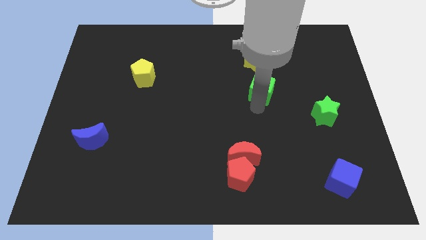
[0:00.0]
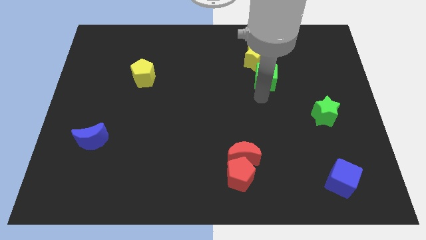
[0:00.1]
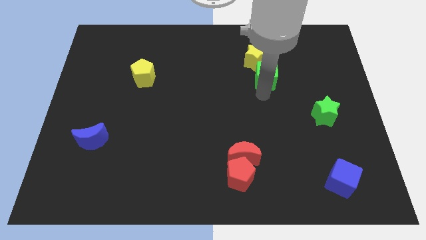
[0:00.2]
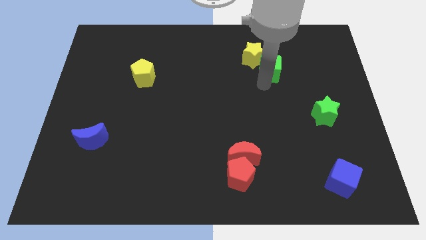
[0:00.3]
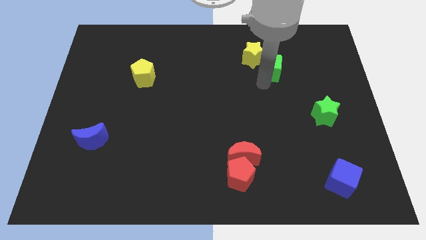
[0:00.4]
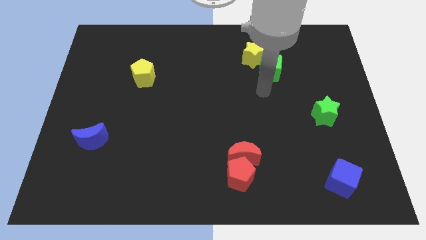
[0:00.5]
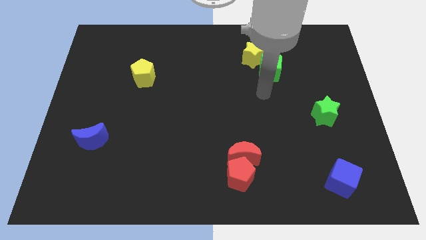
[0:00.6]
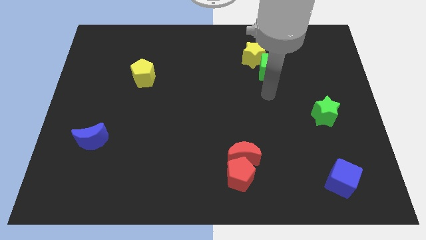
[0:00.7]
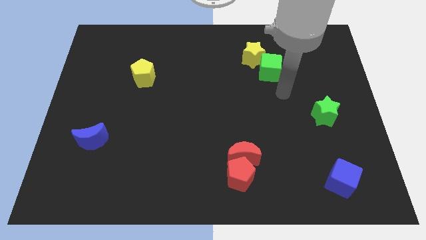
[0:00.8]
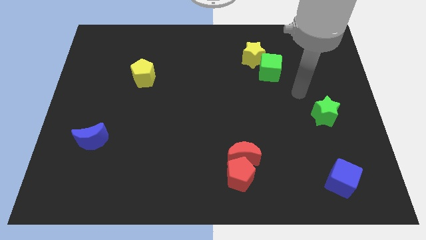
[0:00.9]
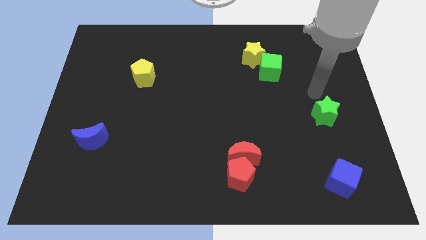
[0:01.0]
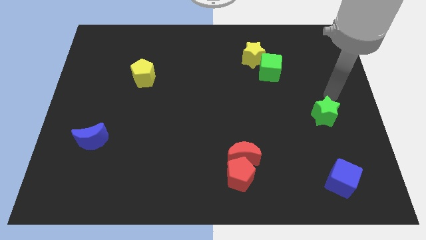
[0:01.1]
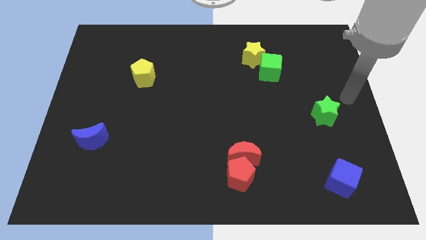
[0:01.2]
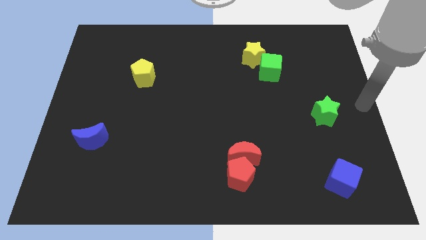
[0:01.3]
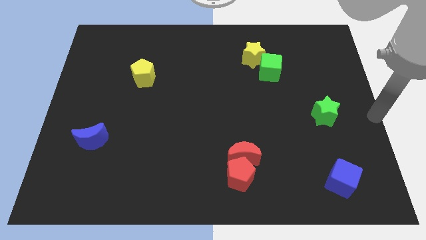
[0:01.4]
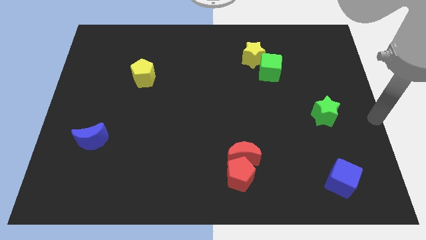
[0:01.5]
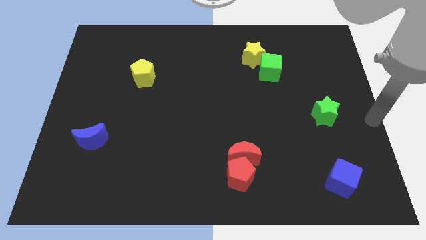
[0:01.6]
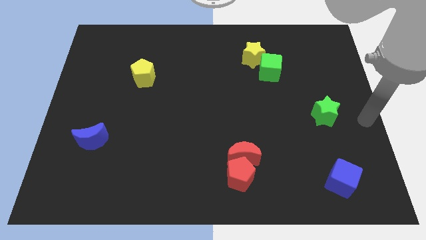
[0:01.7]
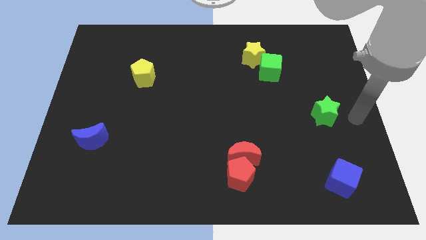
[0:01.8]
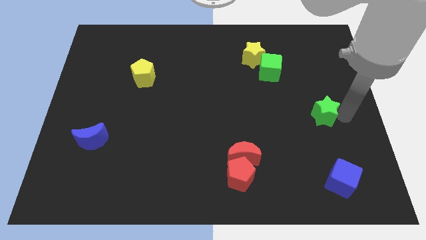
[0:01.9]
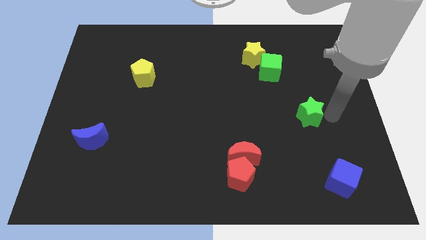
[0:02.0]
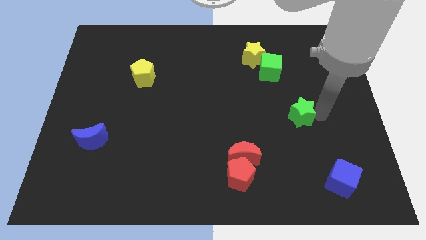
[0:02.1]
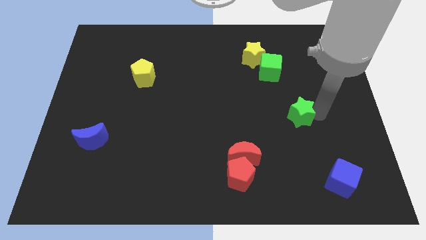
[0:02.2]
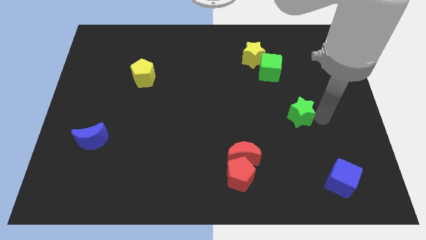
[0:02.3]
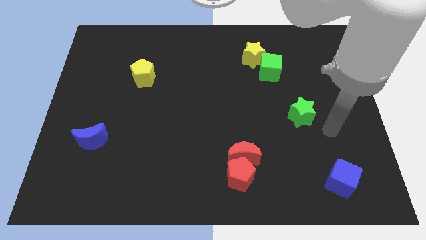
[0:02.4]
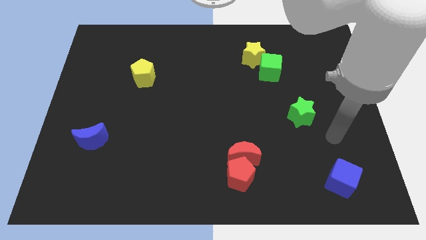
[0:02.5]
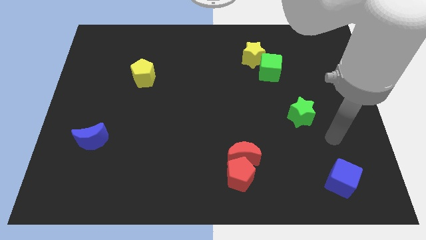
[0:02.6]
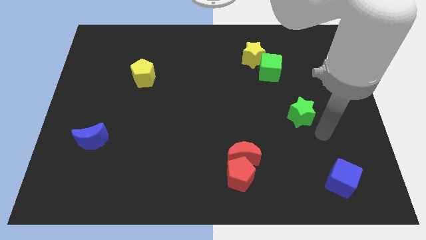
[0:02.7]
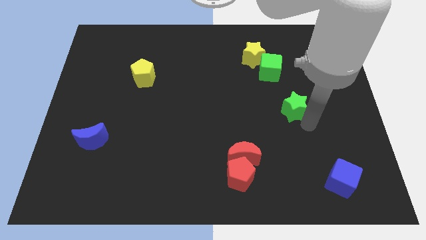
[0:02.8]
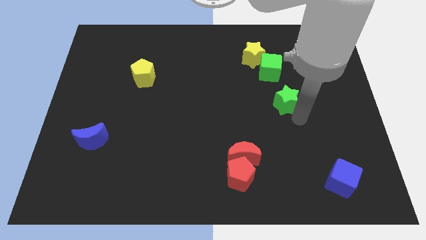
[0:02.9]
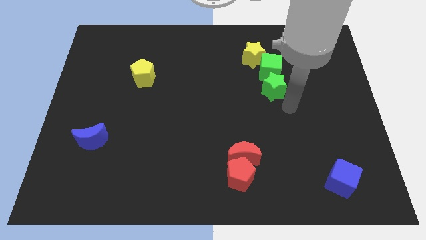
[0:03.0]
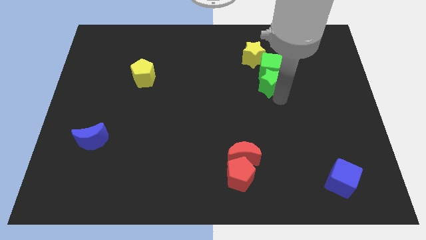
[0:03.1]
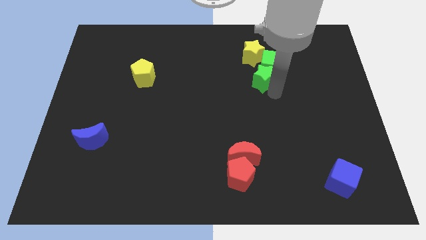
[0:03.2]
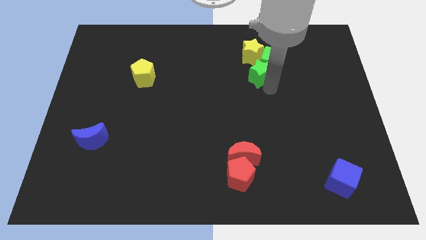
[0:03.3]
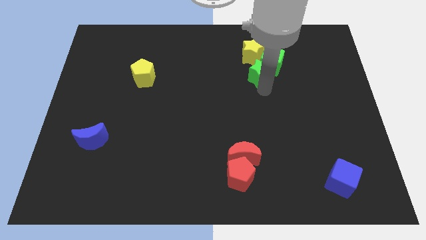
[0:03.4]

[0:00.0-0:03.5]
move the green blocks into the yellow star

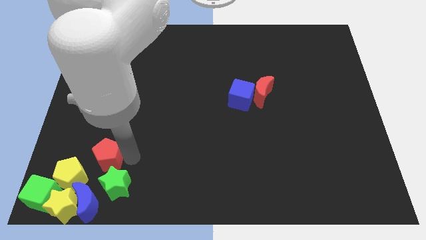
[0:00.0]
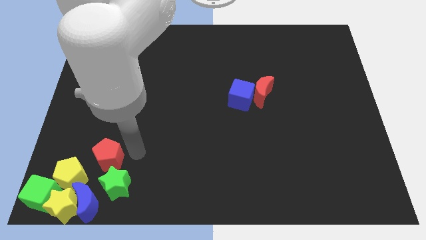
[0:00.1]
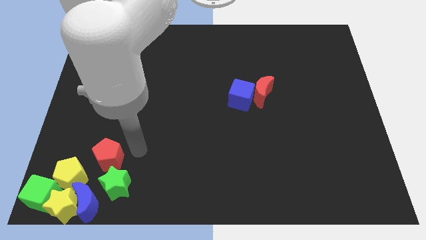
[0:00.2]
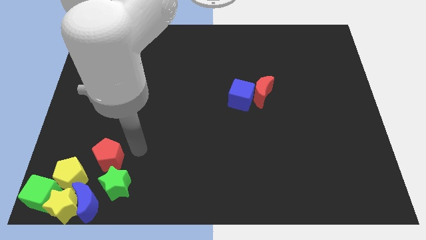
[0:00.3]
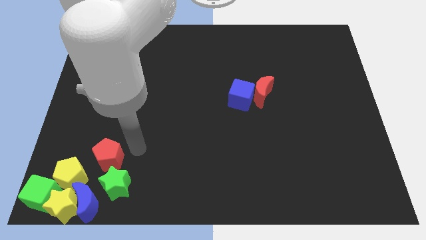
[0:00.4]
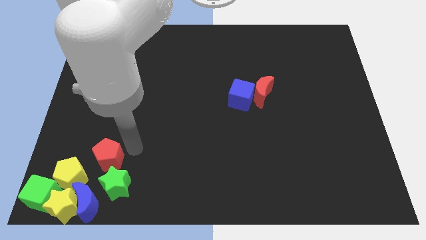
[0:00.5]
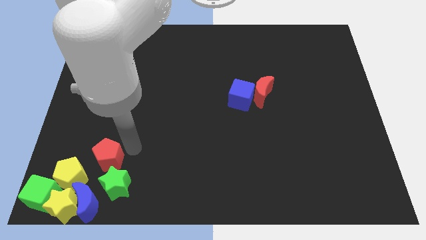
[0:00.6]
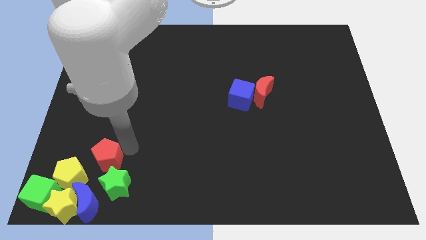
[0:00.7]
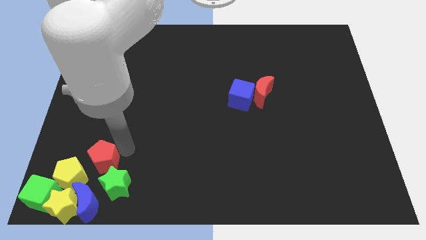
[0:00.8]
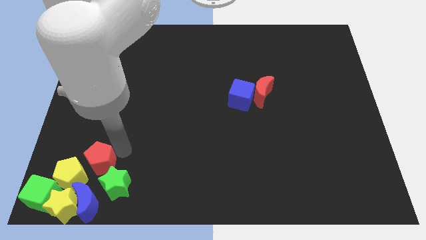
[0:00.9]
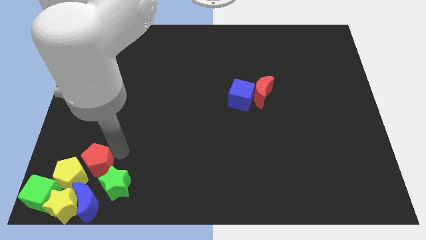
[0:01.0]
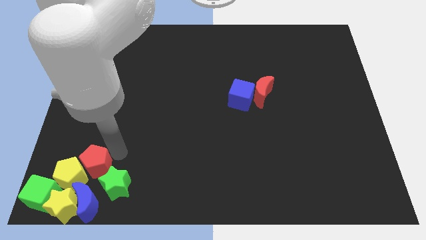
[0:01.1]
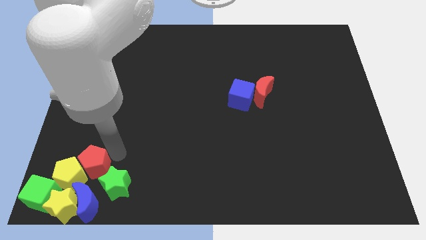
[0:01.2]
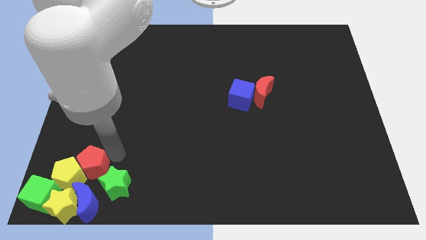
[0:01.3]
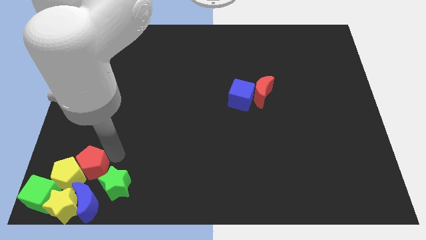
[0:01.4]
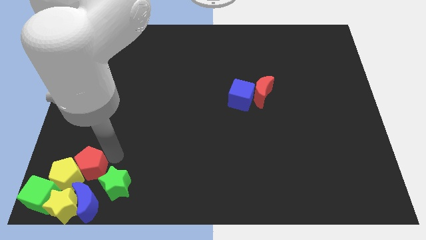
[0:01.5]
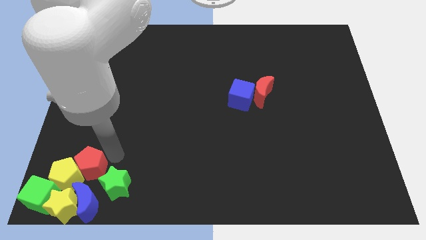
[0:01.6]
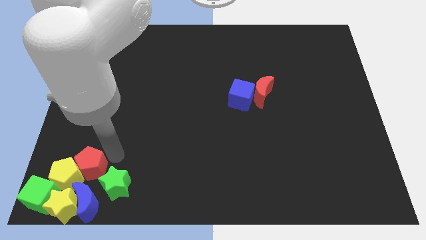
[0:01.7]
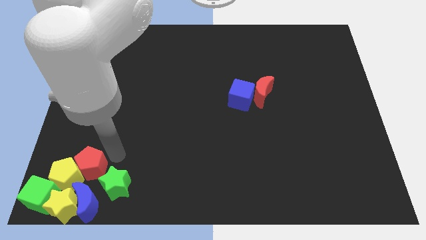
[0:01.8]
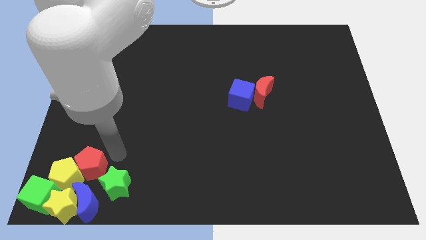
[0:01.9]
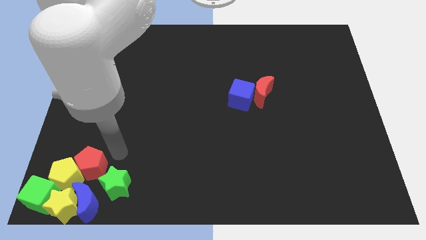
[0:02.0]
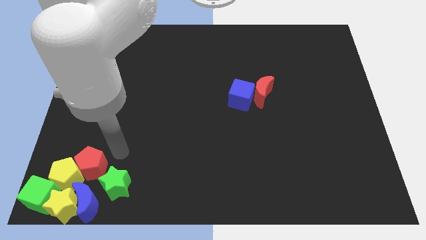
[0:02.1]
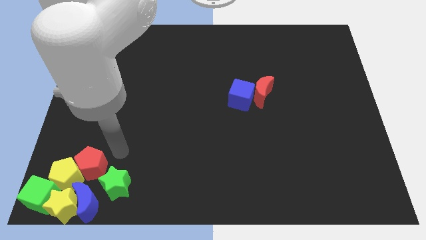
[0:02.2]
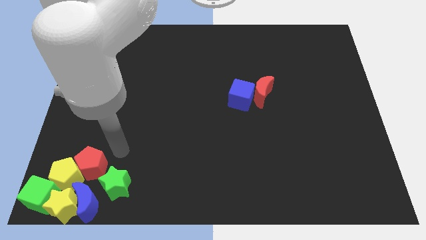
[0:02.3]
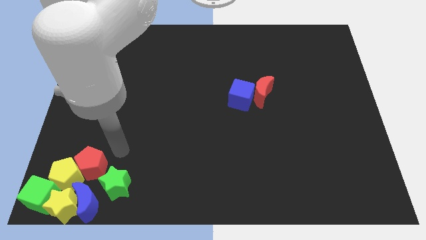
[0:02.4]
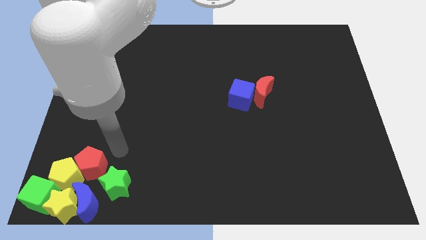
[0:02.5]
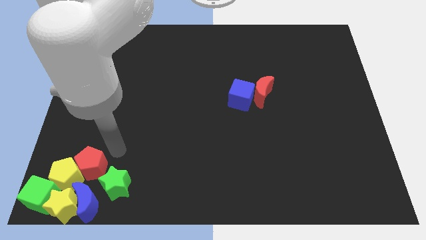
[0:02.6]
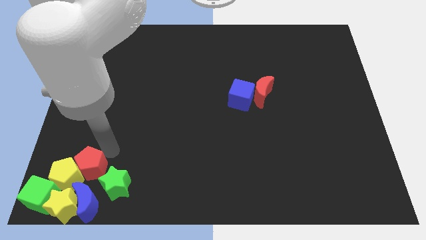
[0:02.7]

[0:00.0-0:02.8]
move the red pentagon into the blocks

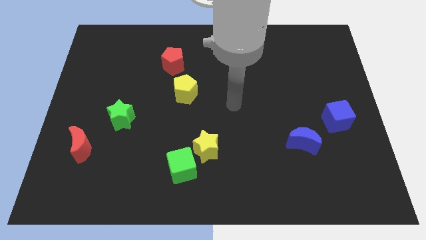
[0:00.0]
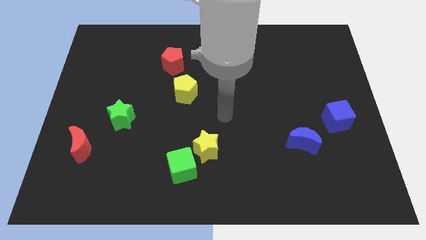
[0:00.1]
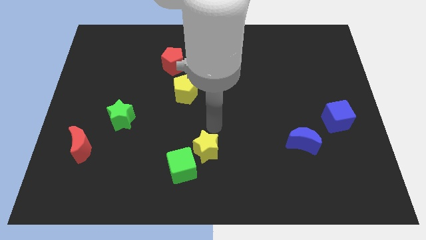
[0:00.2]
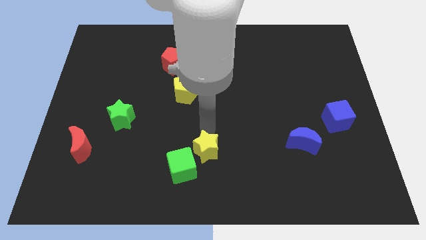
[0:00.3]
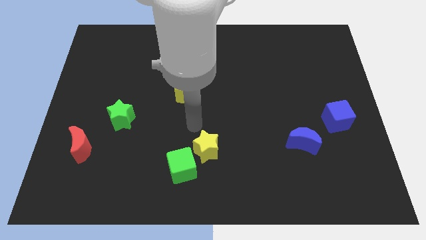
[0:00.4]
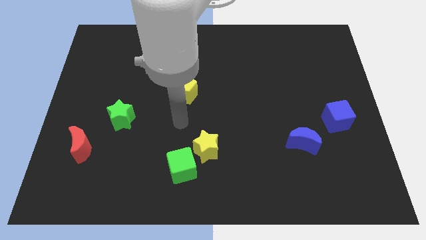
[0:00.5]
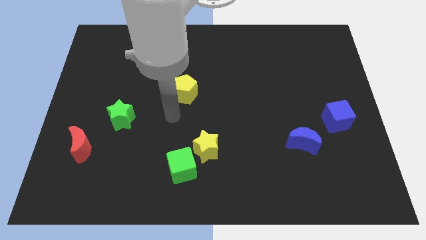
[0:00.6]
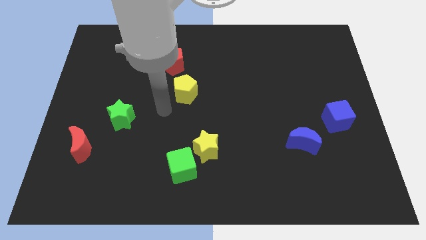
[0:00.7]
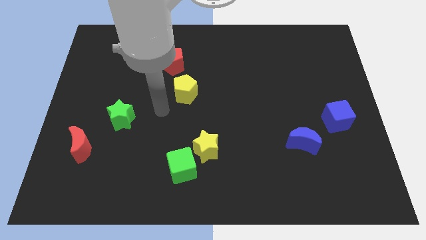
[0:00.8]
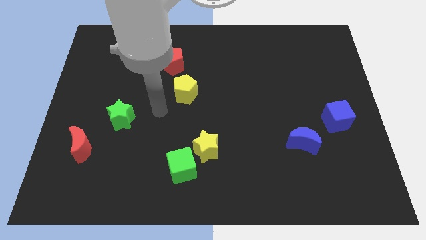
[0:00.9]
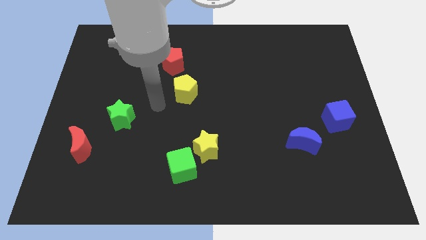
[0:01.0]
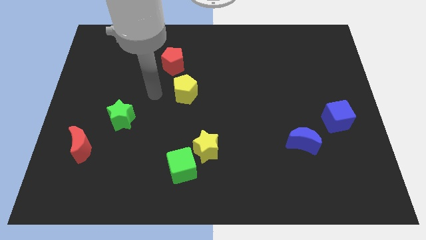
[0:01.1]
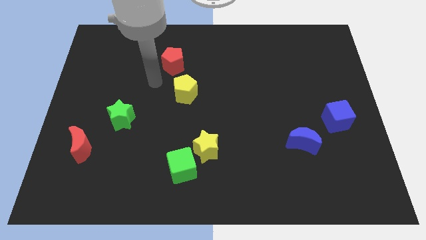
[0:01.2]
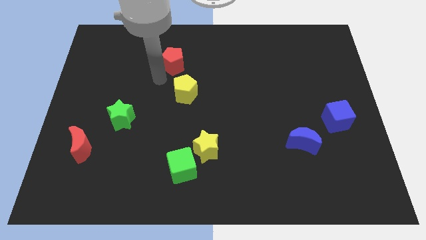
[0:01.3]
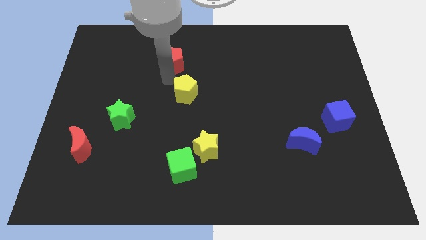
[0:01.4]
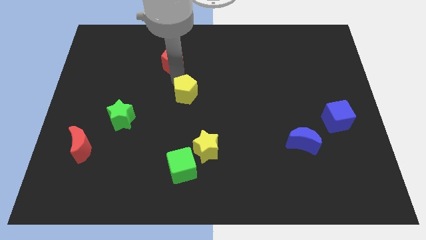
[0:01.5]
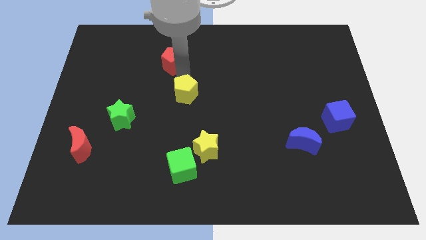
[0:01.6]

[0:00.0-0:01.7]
move the arm towards the top of yellow pentagon

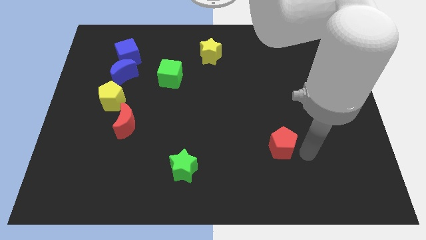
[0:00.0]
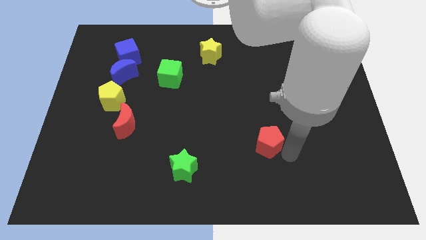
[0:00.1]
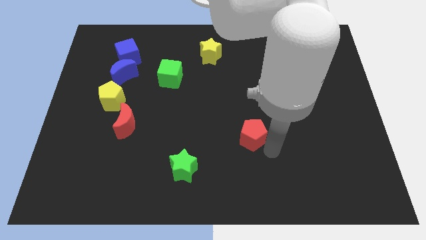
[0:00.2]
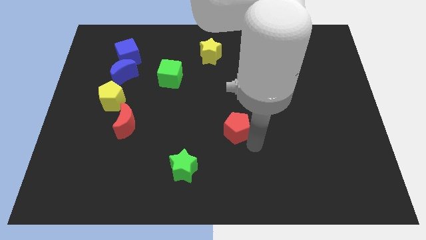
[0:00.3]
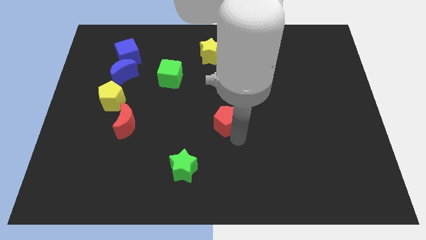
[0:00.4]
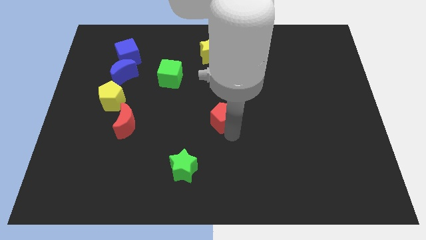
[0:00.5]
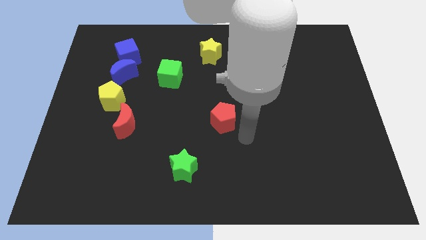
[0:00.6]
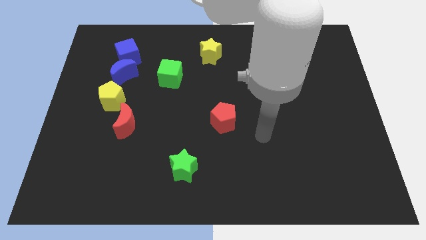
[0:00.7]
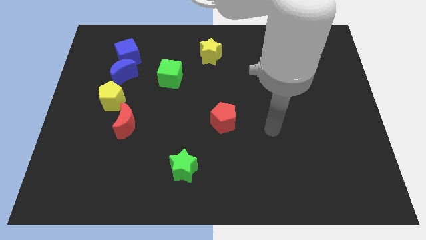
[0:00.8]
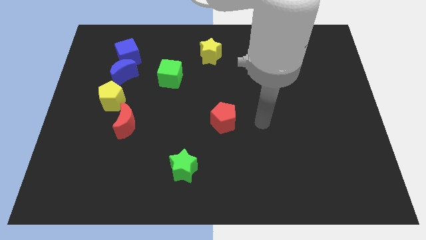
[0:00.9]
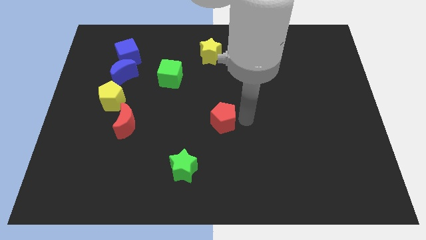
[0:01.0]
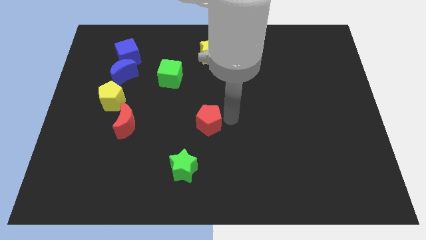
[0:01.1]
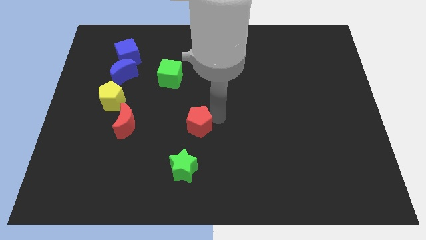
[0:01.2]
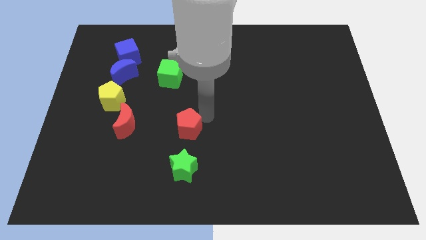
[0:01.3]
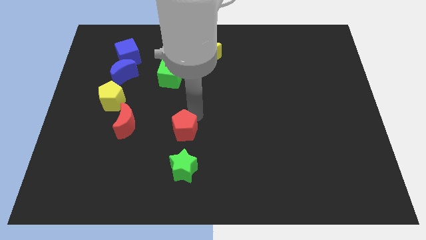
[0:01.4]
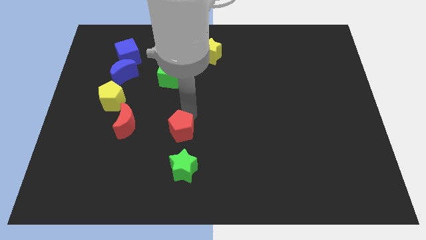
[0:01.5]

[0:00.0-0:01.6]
move the red pentagon to the right side of the red crescent
